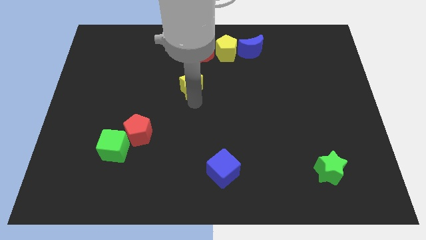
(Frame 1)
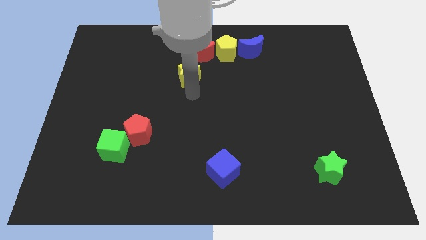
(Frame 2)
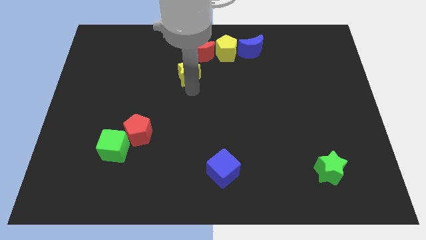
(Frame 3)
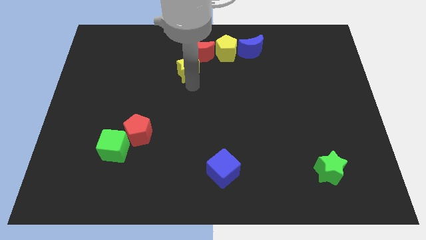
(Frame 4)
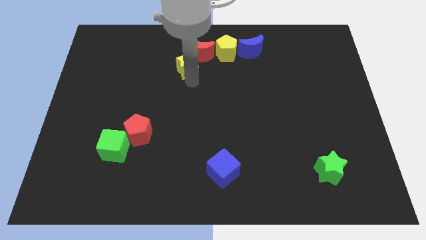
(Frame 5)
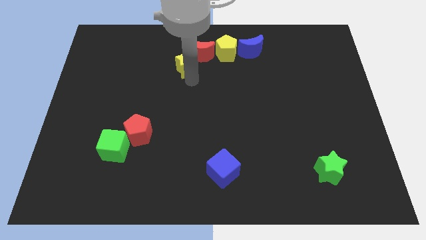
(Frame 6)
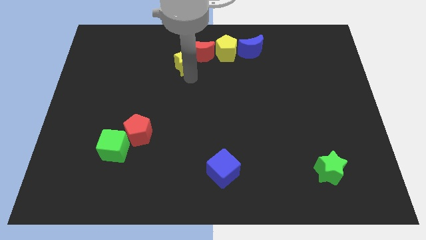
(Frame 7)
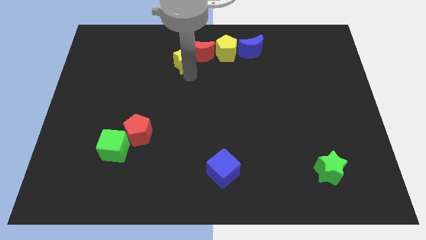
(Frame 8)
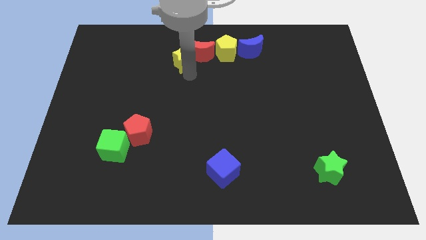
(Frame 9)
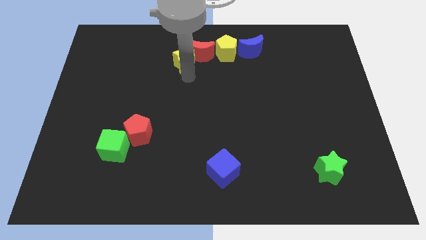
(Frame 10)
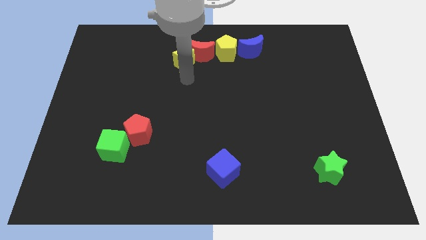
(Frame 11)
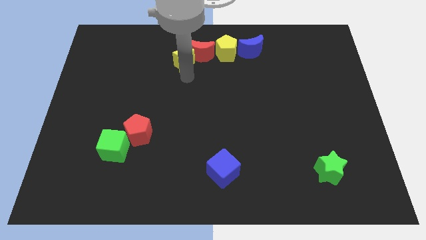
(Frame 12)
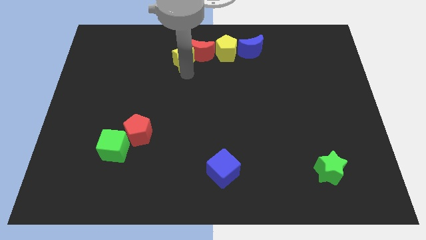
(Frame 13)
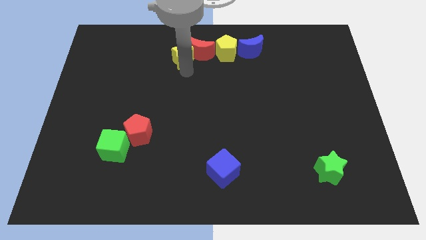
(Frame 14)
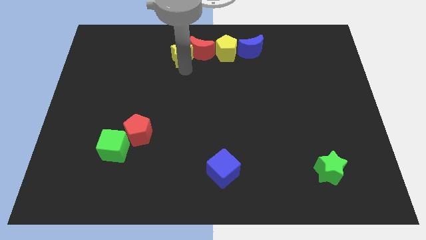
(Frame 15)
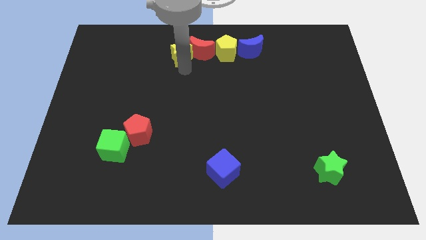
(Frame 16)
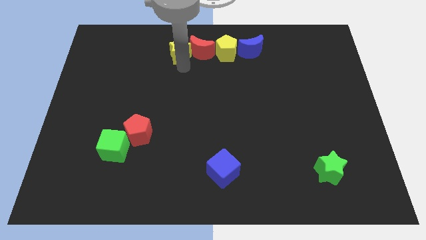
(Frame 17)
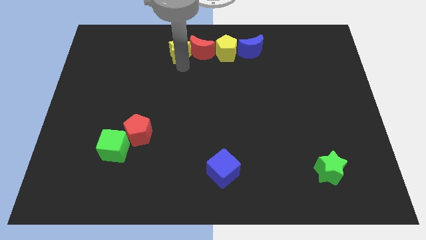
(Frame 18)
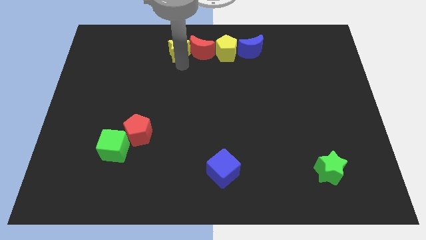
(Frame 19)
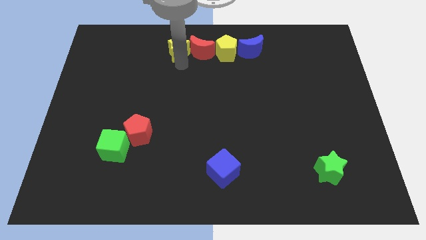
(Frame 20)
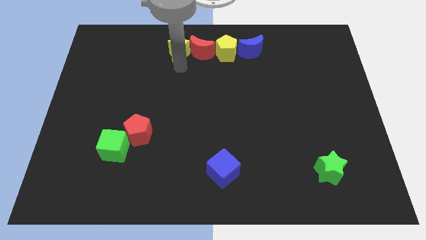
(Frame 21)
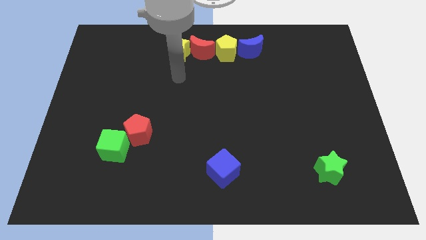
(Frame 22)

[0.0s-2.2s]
push the yellow star on left to red moon

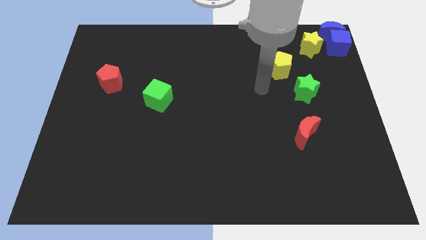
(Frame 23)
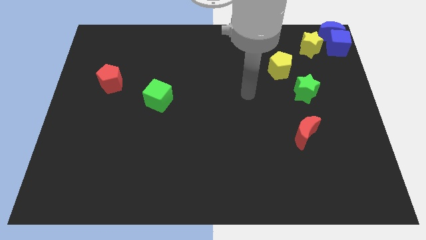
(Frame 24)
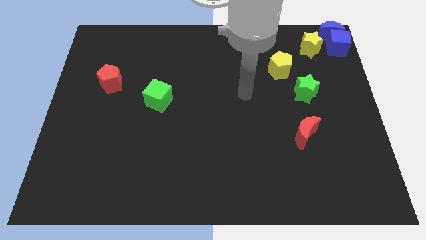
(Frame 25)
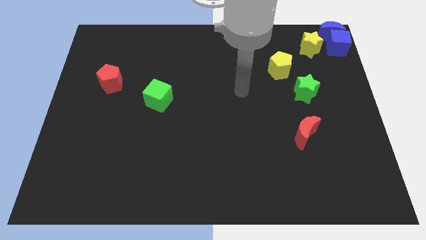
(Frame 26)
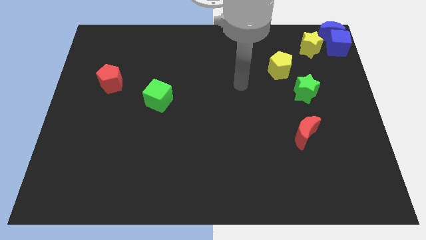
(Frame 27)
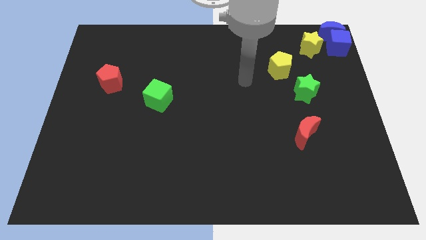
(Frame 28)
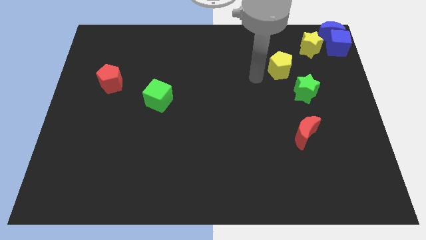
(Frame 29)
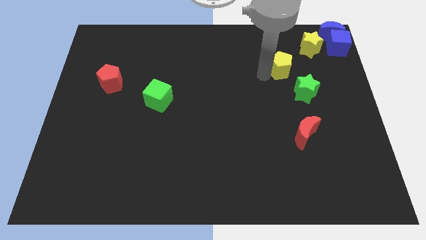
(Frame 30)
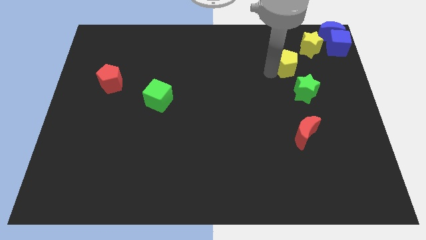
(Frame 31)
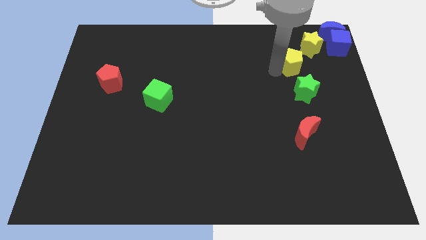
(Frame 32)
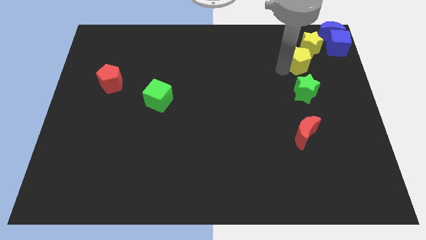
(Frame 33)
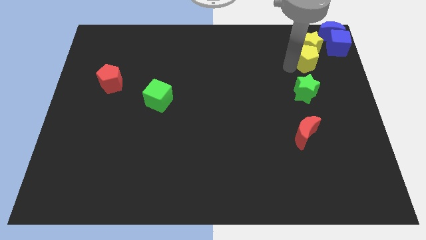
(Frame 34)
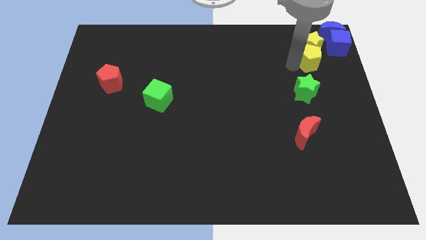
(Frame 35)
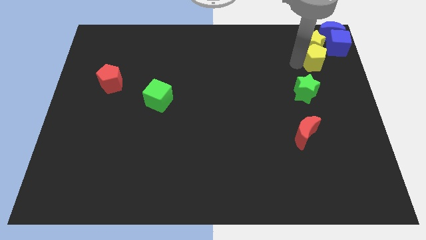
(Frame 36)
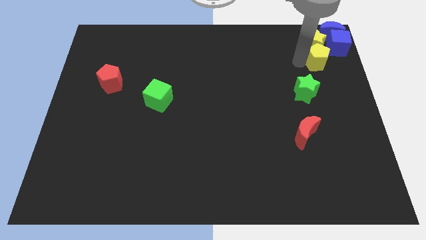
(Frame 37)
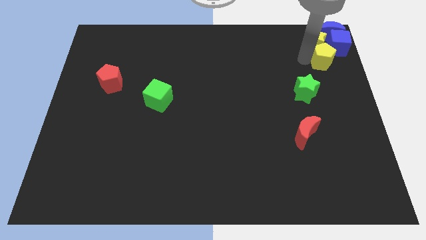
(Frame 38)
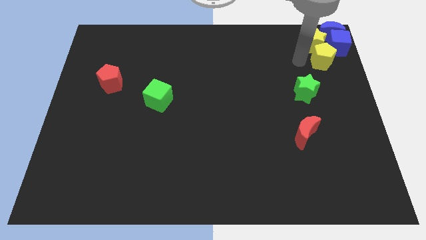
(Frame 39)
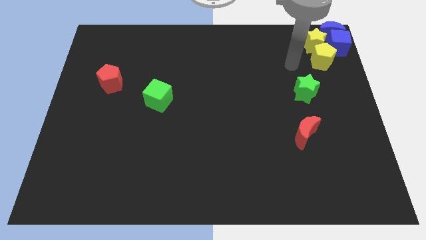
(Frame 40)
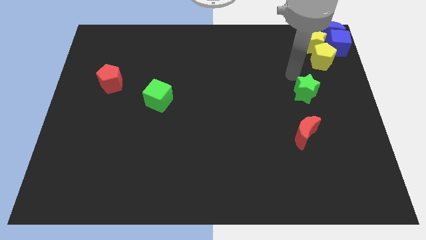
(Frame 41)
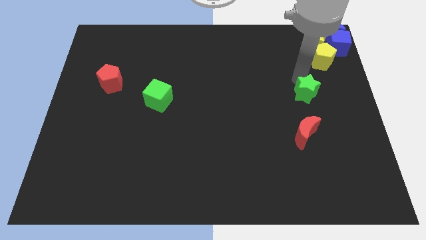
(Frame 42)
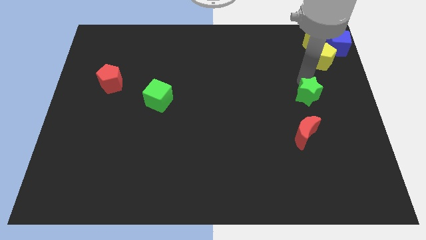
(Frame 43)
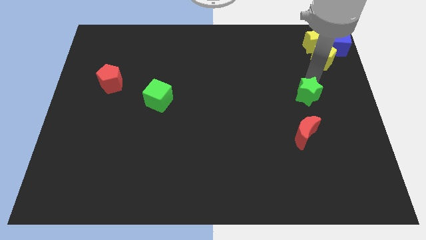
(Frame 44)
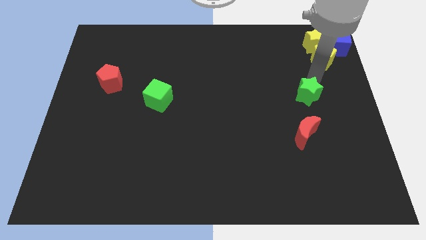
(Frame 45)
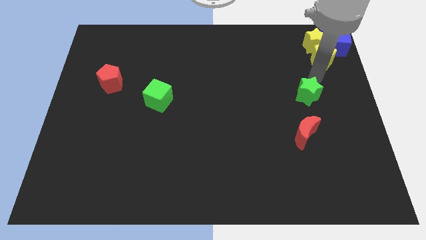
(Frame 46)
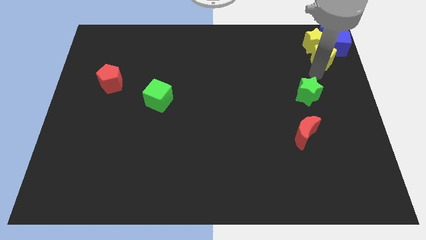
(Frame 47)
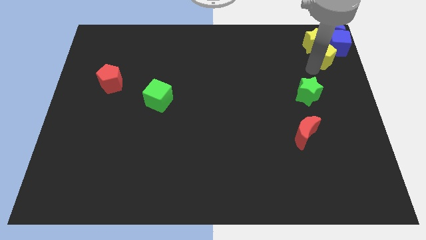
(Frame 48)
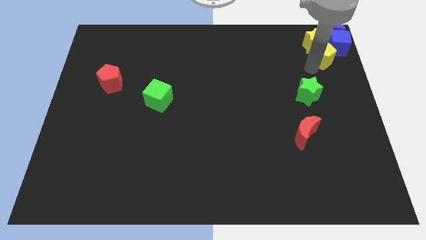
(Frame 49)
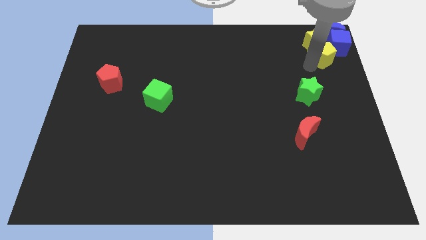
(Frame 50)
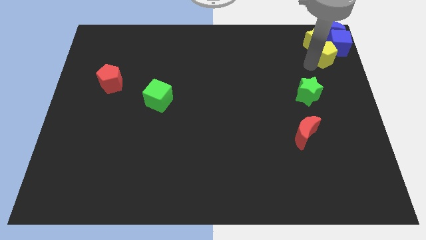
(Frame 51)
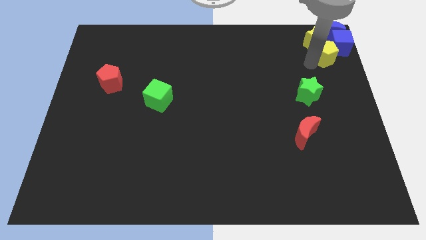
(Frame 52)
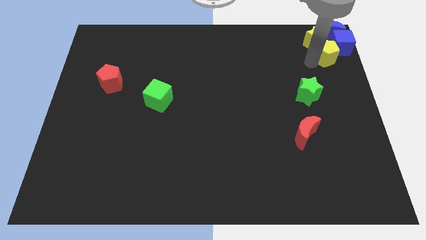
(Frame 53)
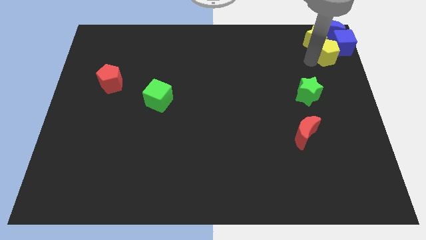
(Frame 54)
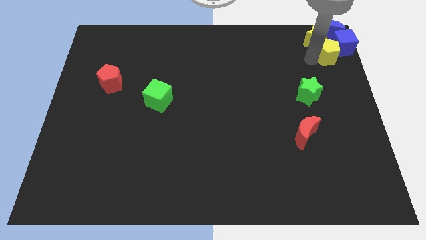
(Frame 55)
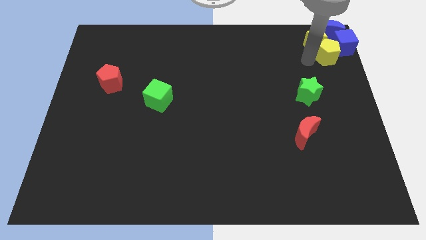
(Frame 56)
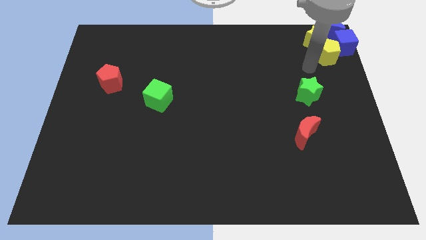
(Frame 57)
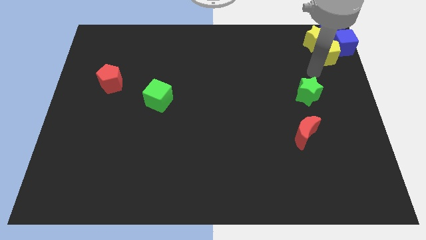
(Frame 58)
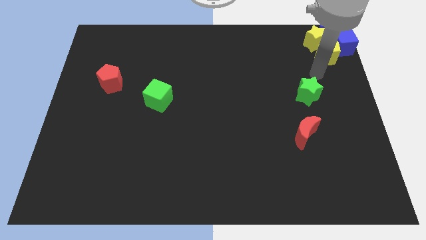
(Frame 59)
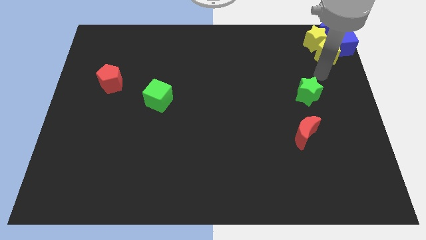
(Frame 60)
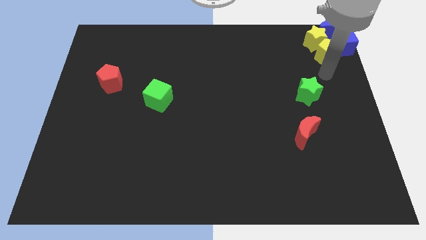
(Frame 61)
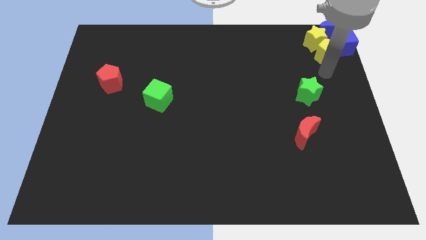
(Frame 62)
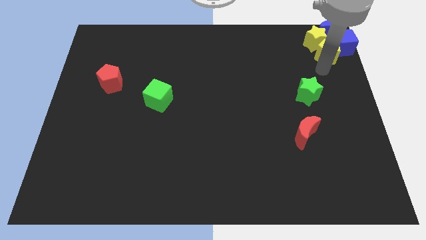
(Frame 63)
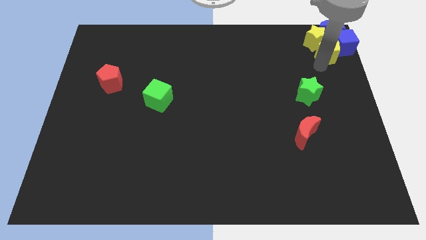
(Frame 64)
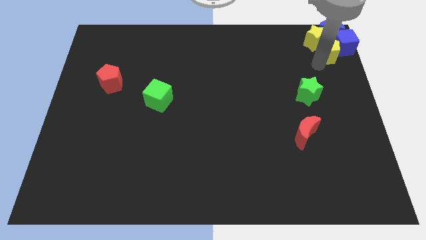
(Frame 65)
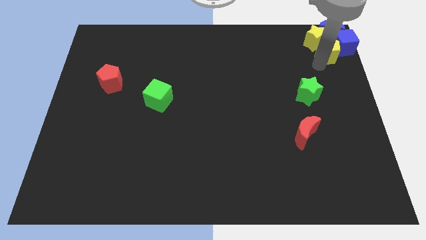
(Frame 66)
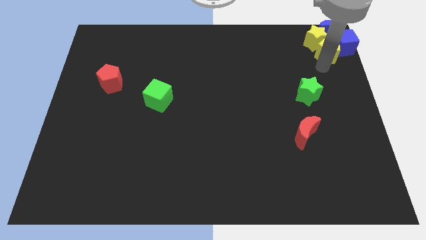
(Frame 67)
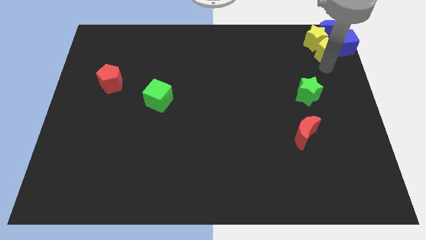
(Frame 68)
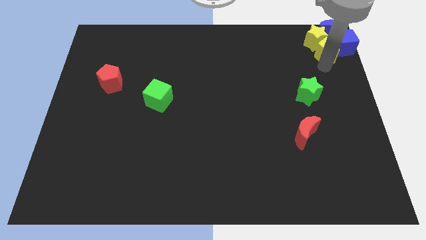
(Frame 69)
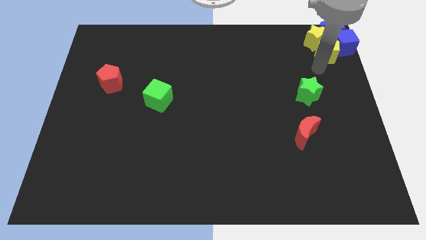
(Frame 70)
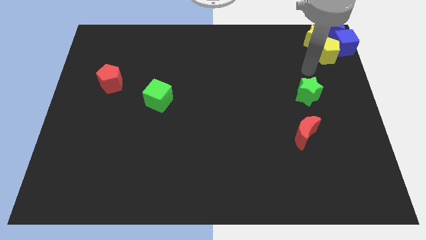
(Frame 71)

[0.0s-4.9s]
push the yellow pentagon into the group of objects

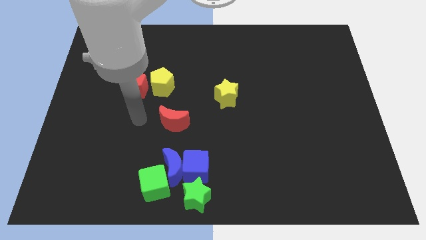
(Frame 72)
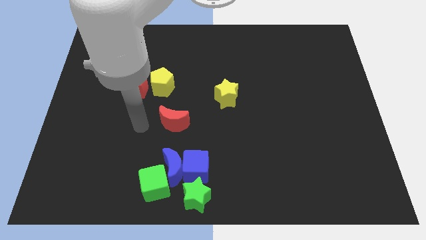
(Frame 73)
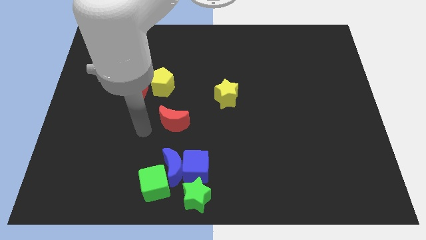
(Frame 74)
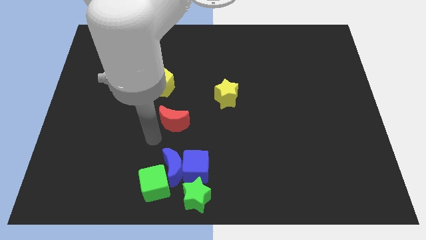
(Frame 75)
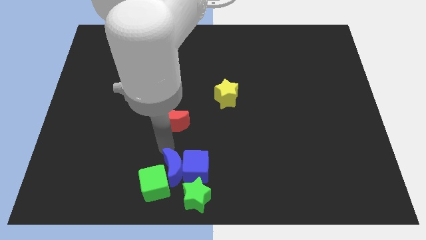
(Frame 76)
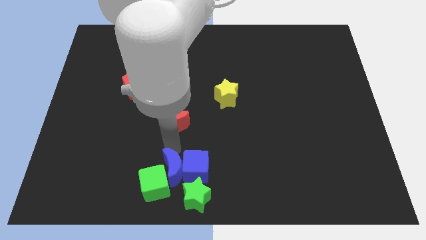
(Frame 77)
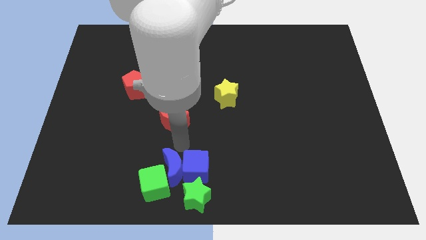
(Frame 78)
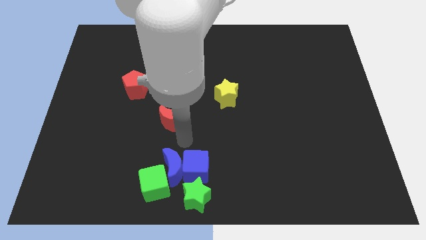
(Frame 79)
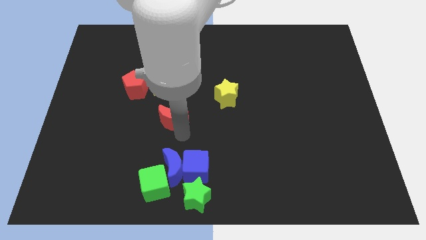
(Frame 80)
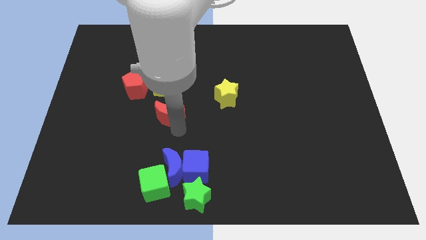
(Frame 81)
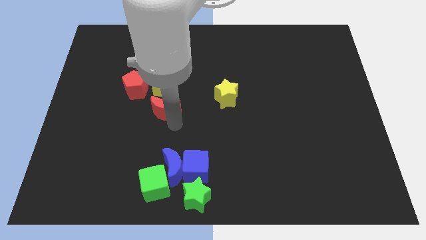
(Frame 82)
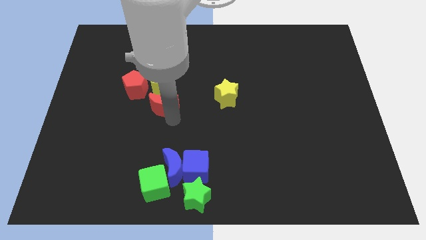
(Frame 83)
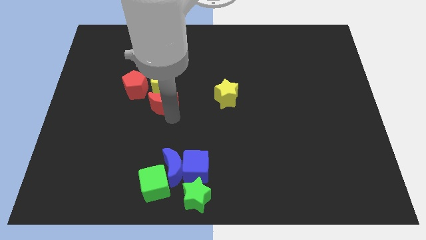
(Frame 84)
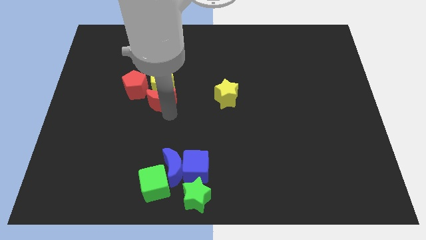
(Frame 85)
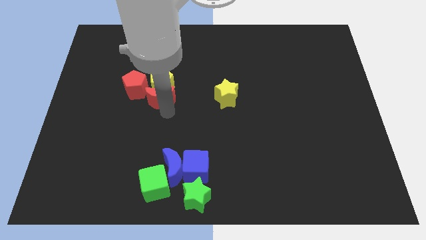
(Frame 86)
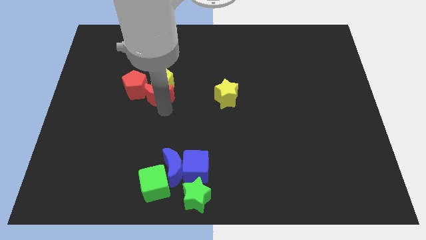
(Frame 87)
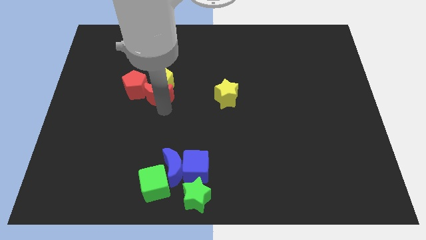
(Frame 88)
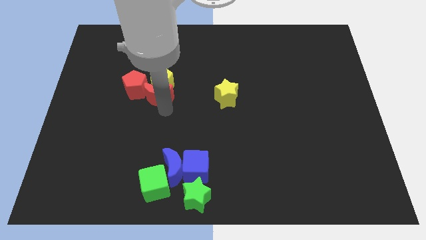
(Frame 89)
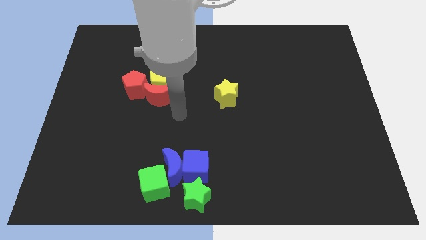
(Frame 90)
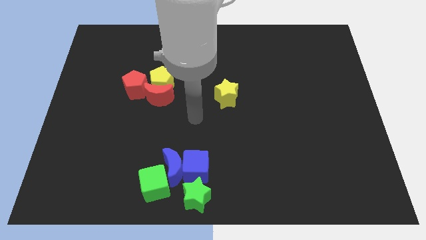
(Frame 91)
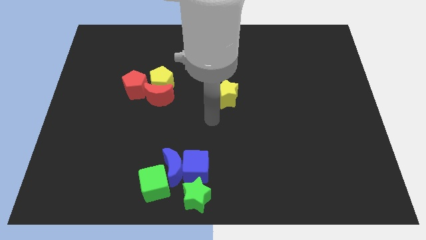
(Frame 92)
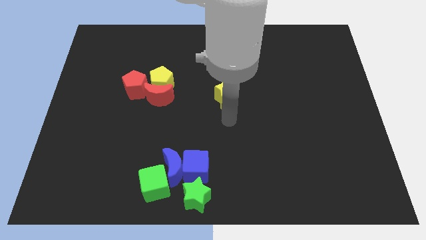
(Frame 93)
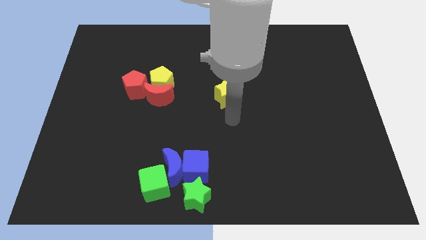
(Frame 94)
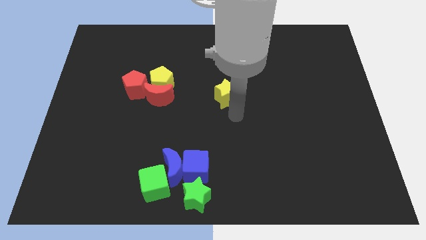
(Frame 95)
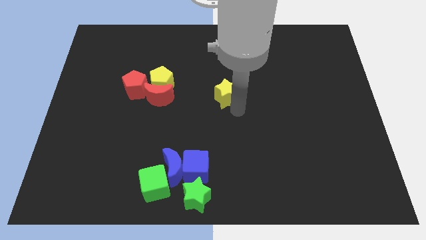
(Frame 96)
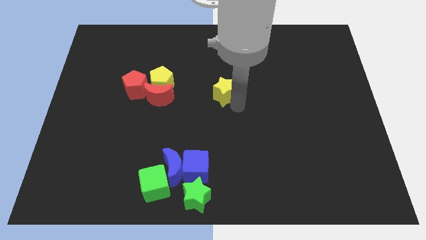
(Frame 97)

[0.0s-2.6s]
move the red crescent to the bottom side of the yellow pentagon
